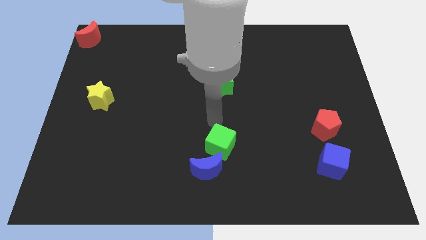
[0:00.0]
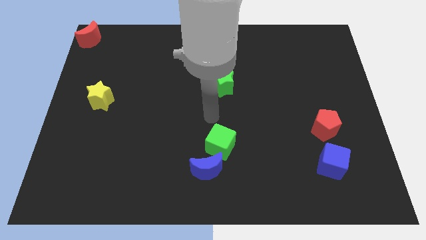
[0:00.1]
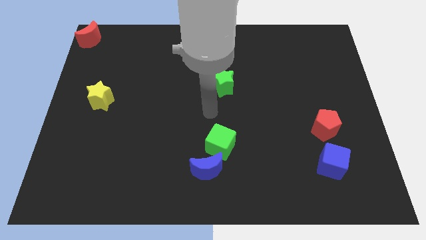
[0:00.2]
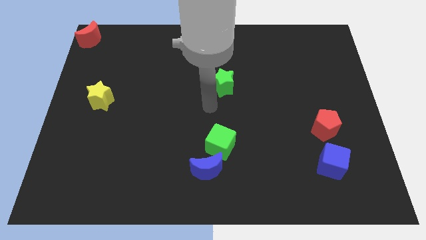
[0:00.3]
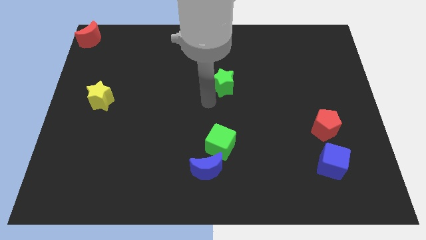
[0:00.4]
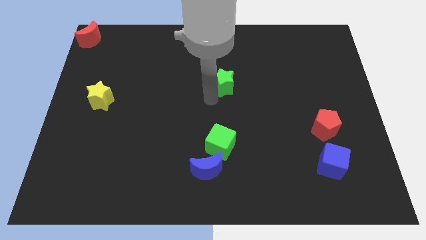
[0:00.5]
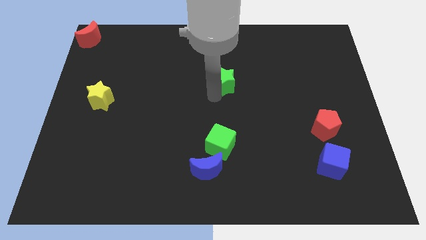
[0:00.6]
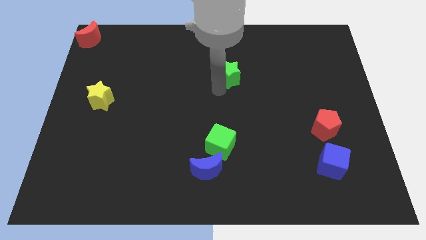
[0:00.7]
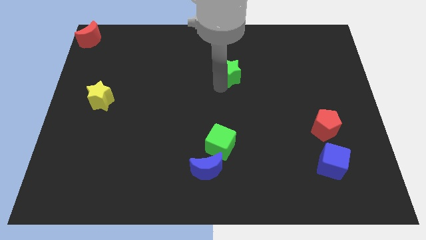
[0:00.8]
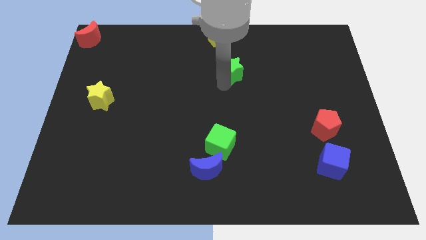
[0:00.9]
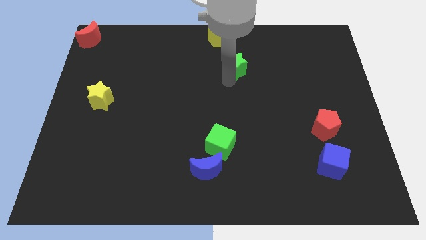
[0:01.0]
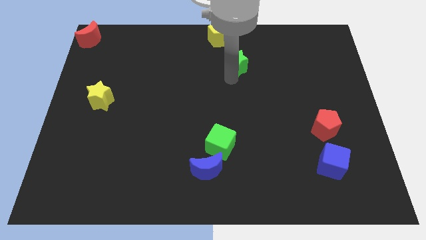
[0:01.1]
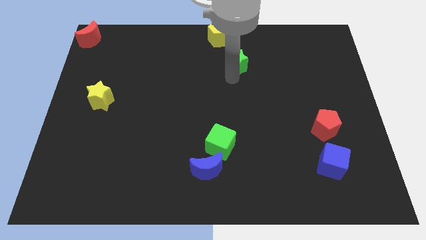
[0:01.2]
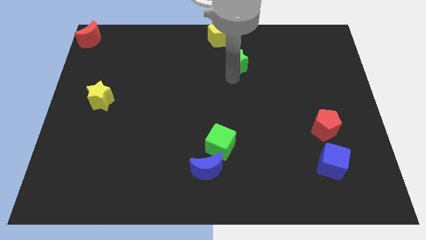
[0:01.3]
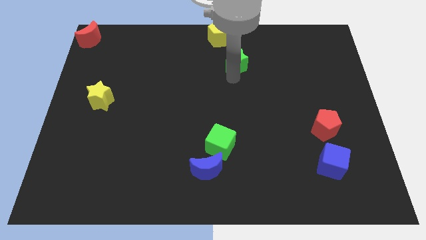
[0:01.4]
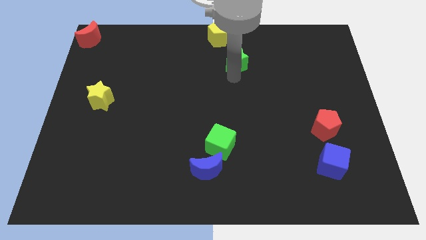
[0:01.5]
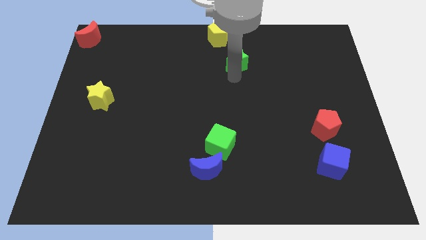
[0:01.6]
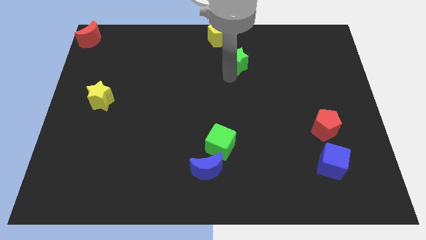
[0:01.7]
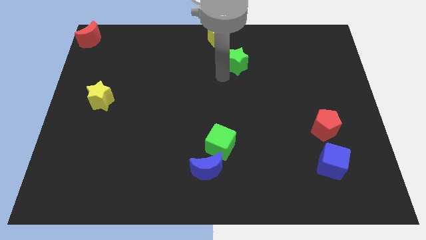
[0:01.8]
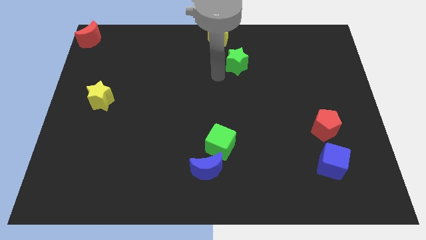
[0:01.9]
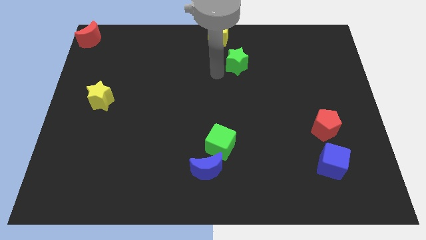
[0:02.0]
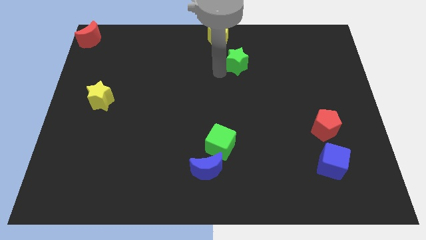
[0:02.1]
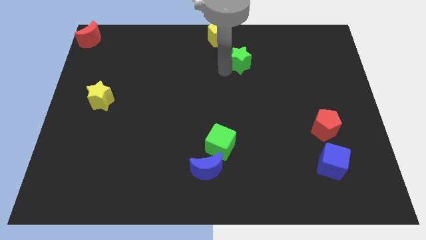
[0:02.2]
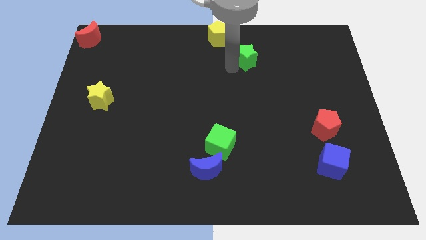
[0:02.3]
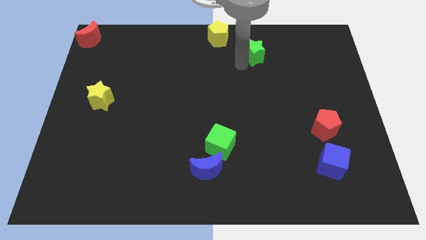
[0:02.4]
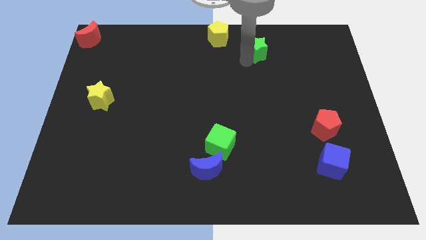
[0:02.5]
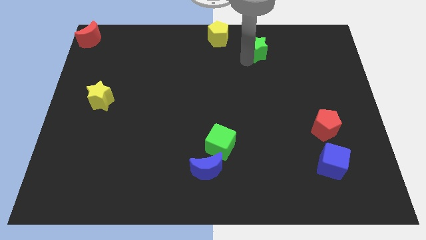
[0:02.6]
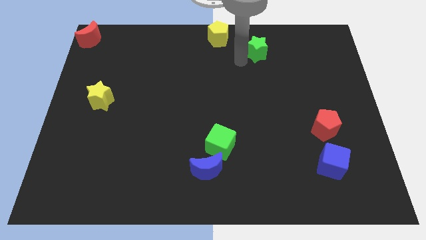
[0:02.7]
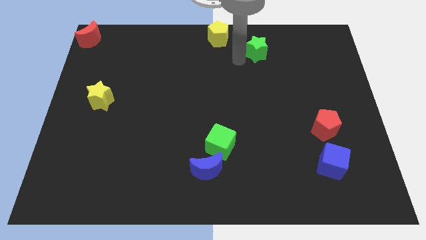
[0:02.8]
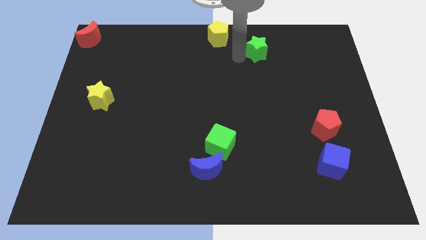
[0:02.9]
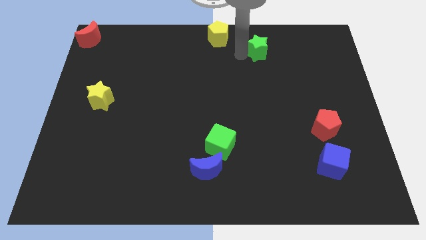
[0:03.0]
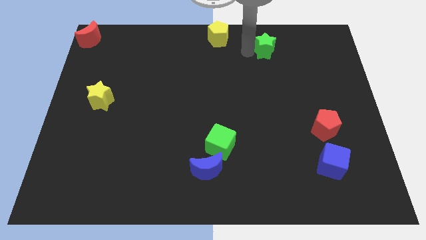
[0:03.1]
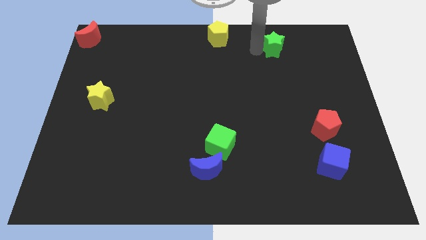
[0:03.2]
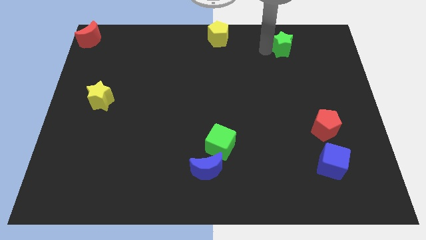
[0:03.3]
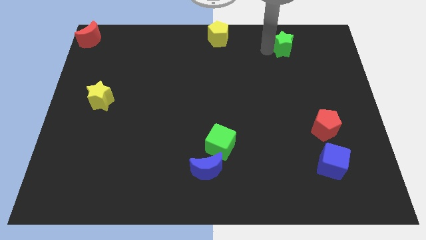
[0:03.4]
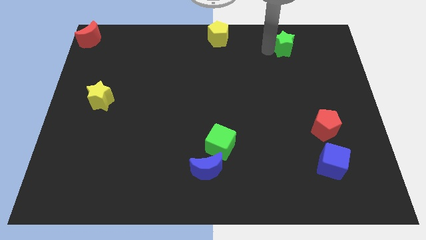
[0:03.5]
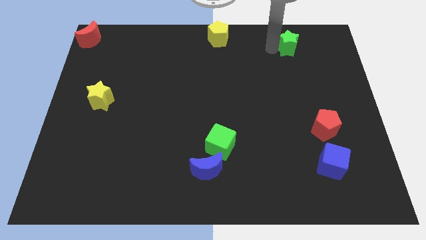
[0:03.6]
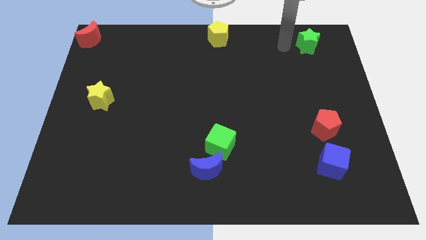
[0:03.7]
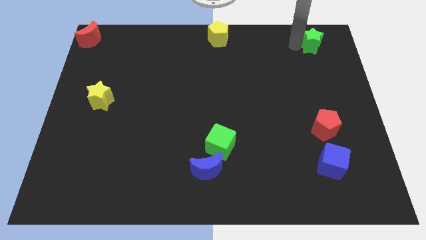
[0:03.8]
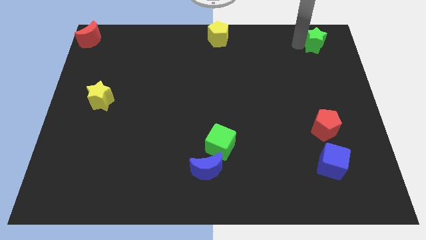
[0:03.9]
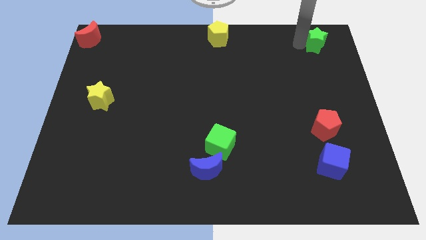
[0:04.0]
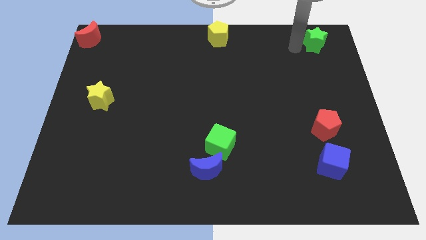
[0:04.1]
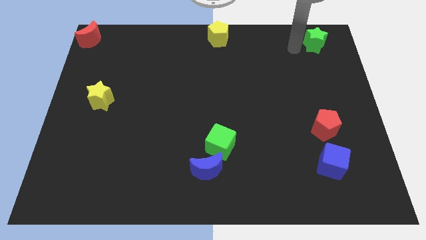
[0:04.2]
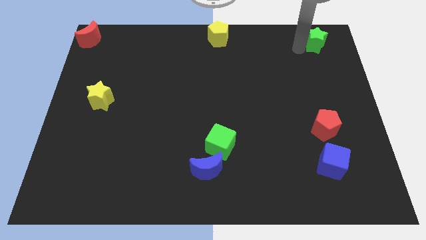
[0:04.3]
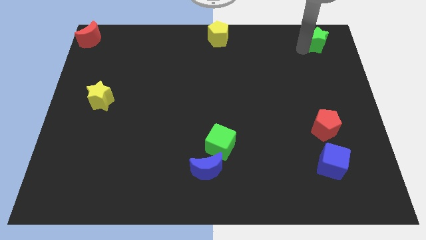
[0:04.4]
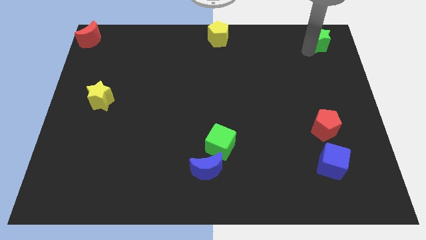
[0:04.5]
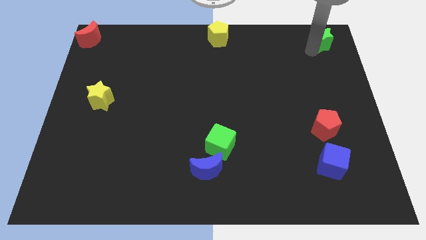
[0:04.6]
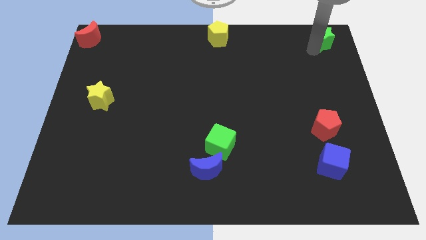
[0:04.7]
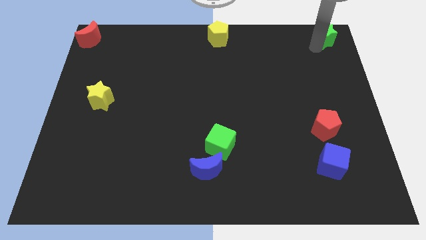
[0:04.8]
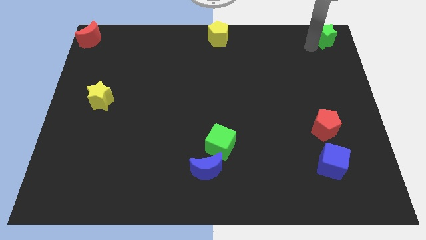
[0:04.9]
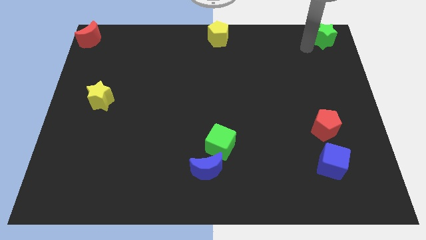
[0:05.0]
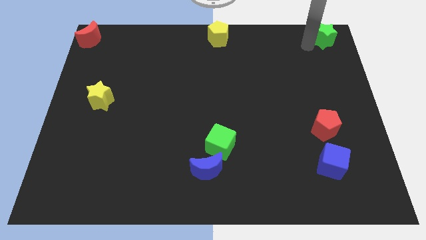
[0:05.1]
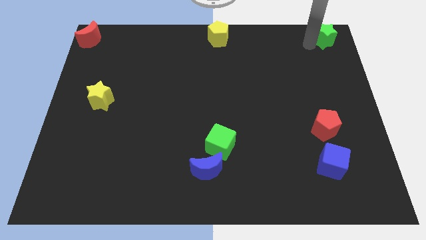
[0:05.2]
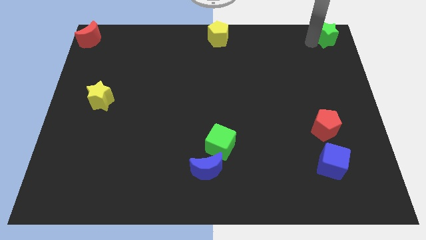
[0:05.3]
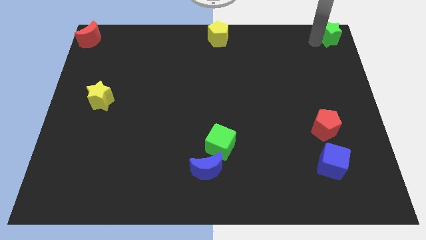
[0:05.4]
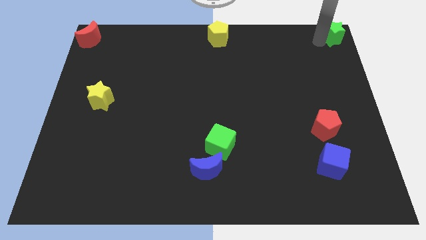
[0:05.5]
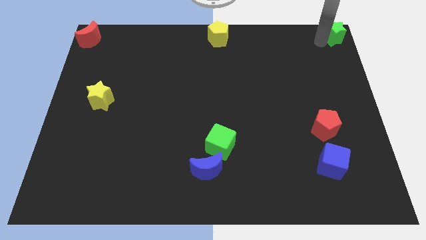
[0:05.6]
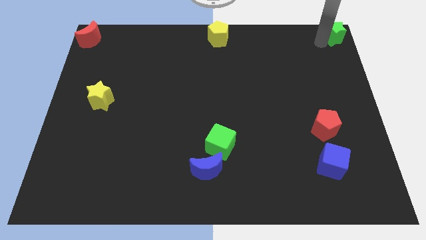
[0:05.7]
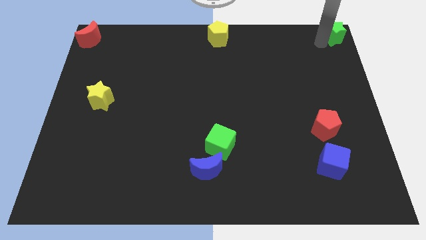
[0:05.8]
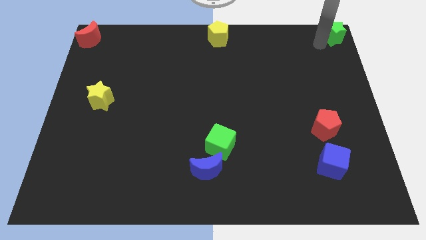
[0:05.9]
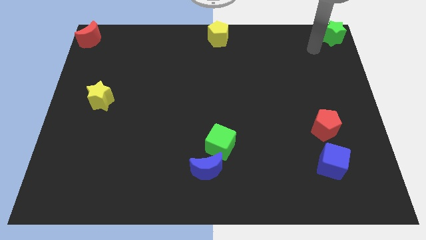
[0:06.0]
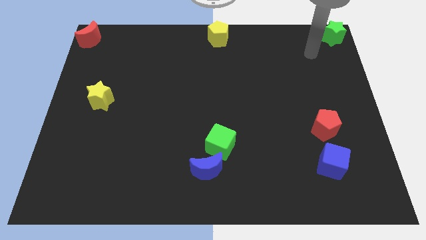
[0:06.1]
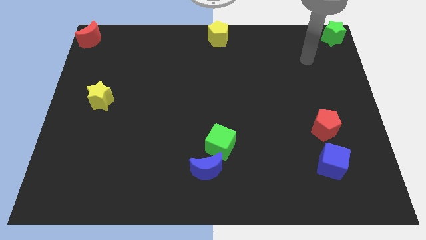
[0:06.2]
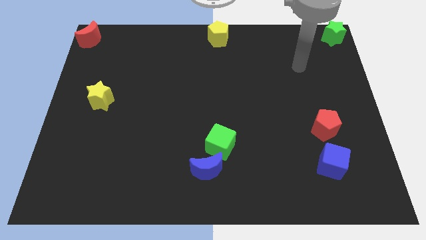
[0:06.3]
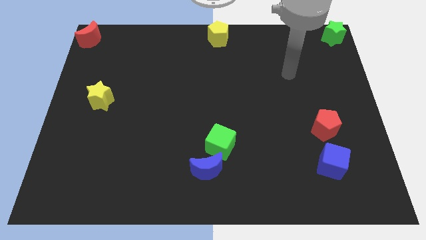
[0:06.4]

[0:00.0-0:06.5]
move the green star to the top right side of the board

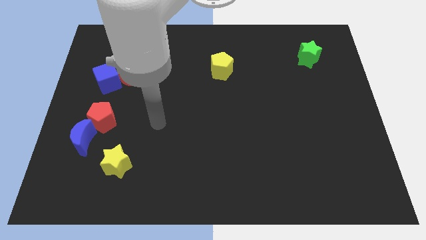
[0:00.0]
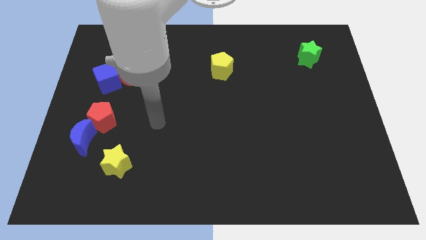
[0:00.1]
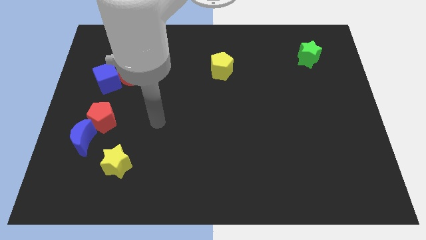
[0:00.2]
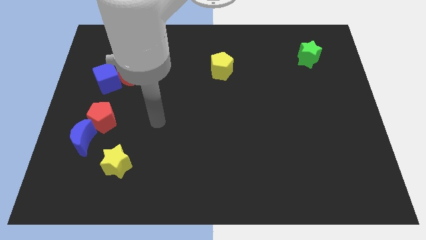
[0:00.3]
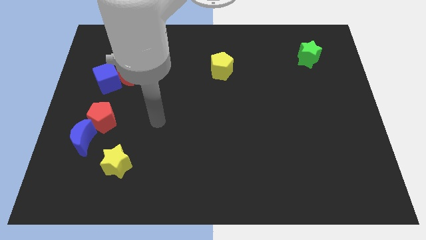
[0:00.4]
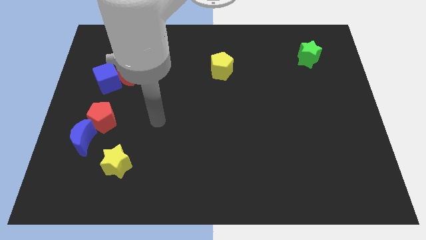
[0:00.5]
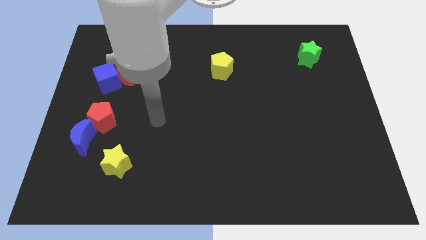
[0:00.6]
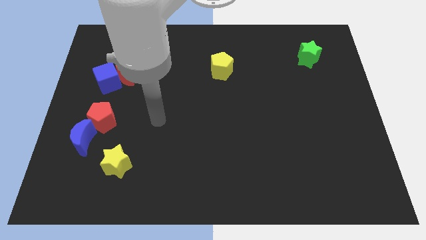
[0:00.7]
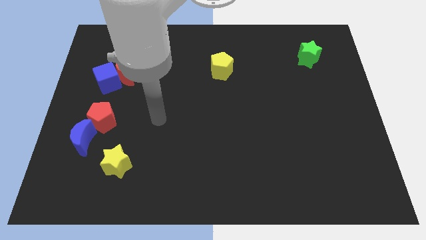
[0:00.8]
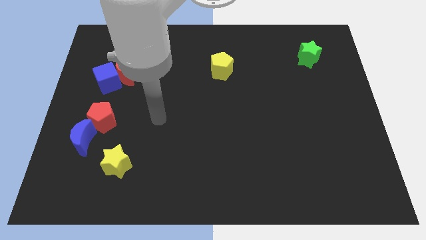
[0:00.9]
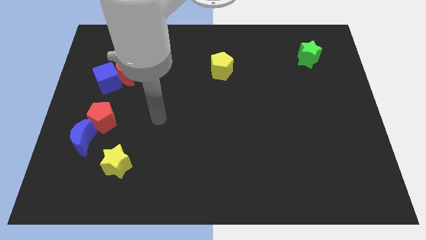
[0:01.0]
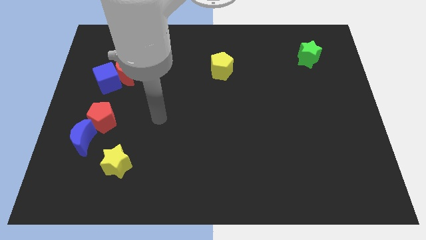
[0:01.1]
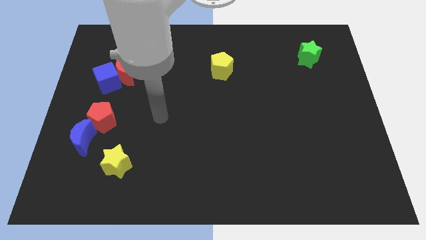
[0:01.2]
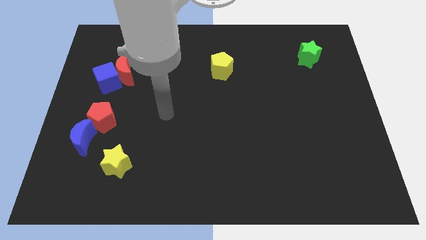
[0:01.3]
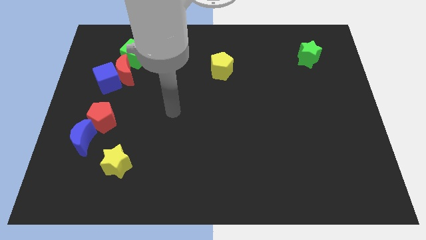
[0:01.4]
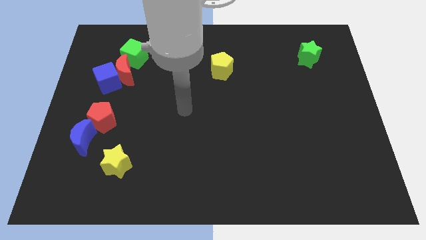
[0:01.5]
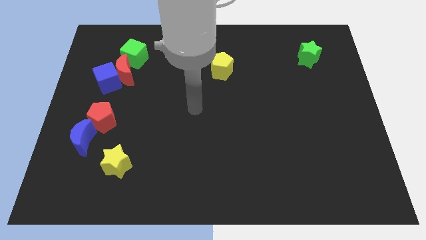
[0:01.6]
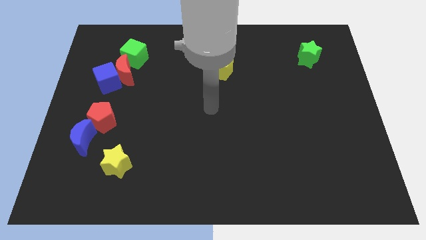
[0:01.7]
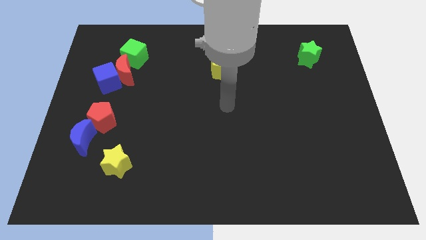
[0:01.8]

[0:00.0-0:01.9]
point your arm below yellow pentagon

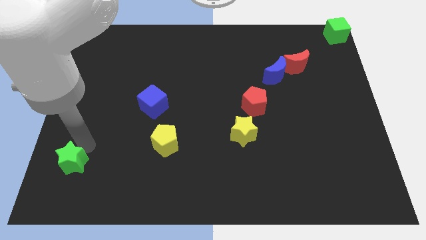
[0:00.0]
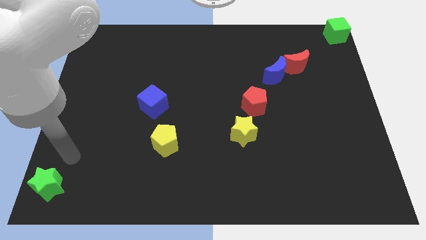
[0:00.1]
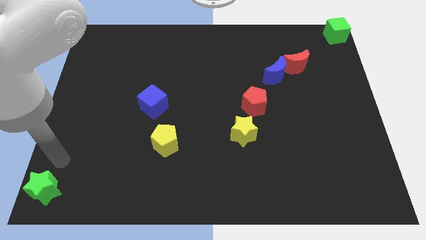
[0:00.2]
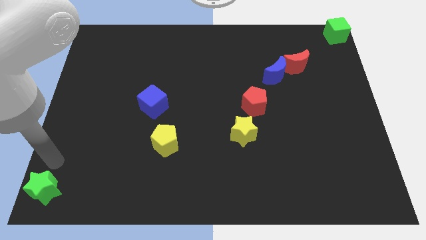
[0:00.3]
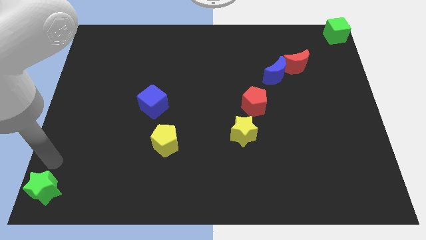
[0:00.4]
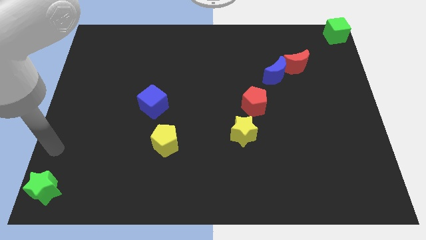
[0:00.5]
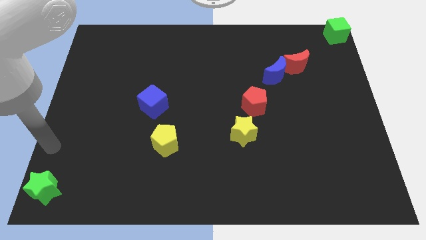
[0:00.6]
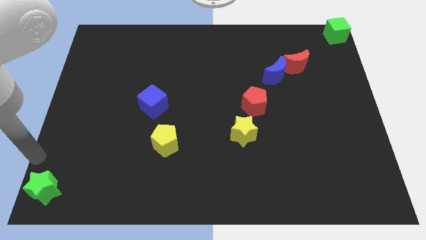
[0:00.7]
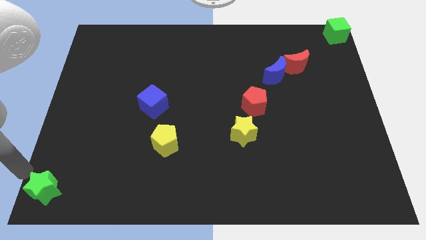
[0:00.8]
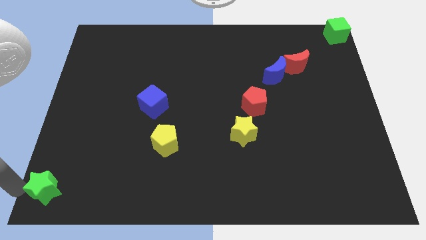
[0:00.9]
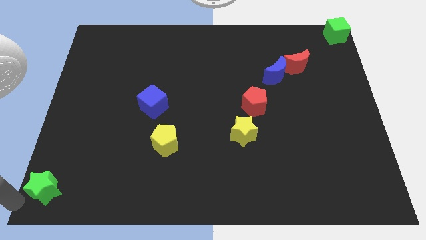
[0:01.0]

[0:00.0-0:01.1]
move the green star slightly towards the bottom left of the board
